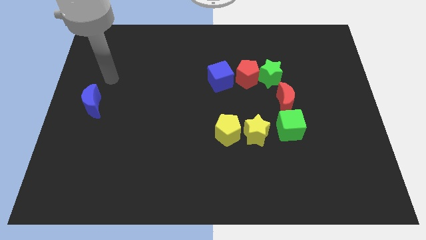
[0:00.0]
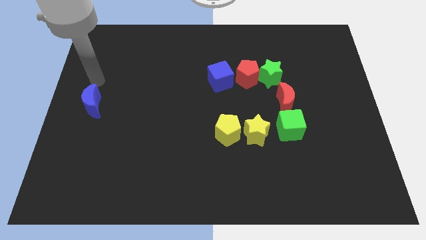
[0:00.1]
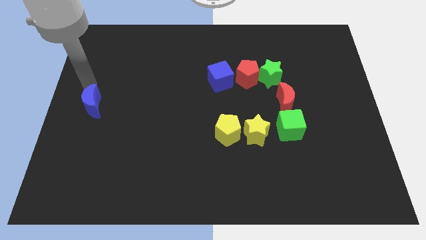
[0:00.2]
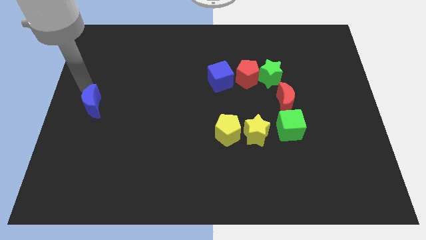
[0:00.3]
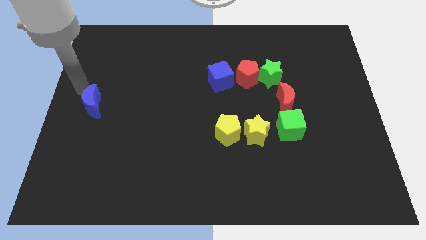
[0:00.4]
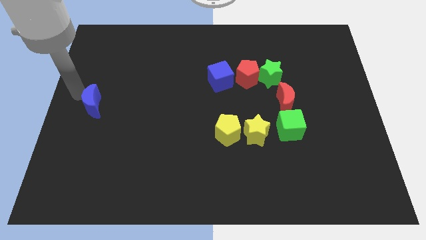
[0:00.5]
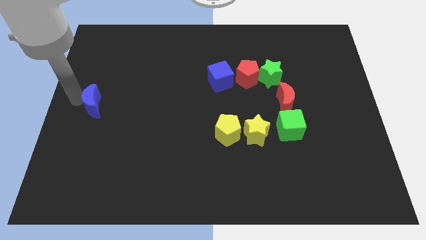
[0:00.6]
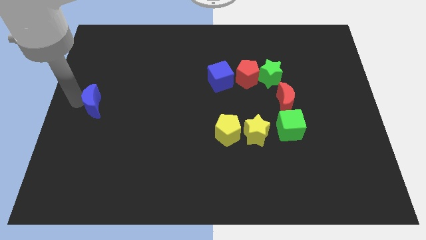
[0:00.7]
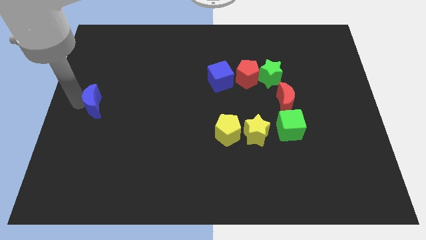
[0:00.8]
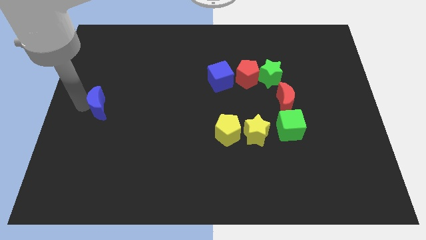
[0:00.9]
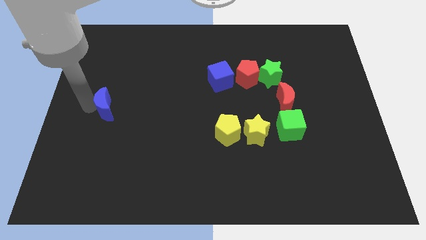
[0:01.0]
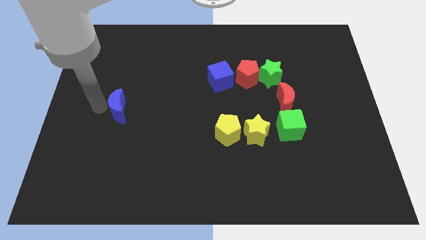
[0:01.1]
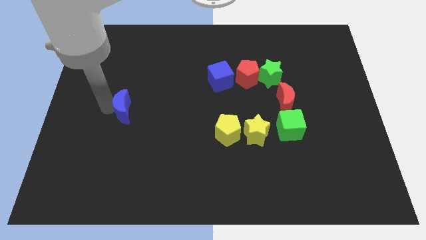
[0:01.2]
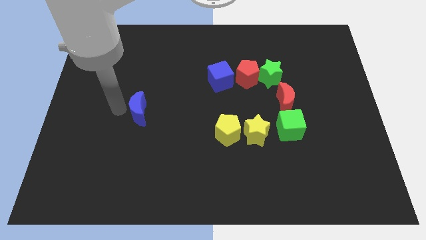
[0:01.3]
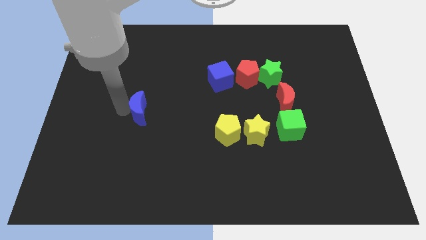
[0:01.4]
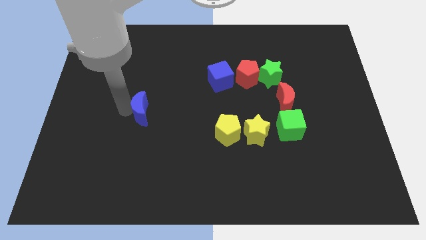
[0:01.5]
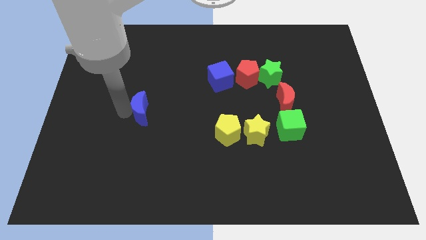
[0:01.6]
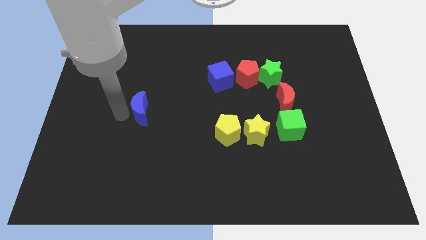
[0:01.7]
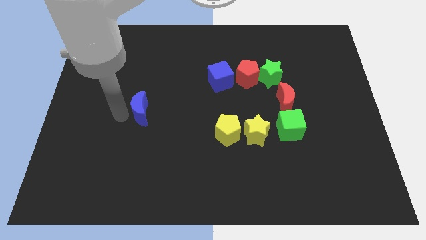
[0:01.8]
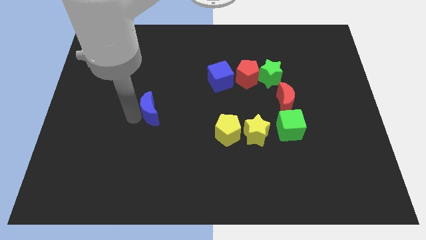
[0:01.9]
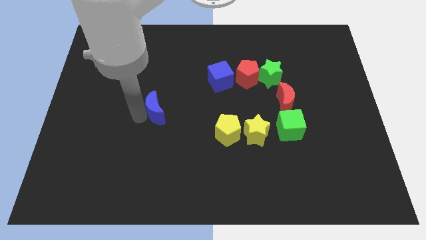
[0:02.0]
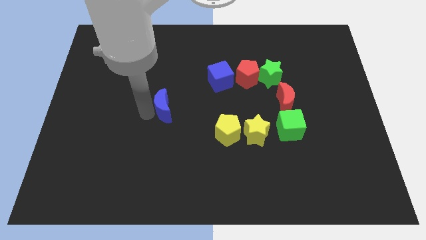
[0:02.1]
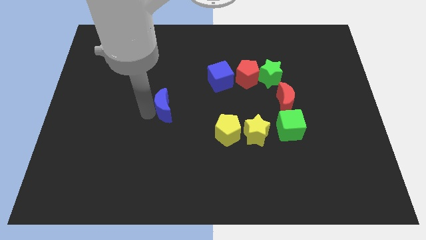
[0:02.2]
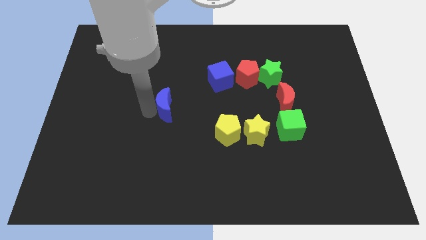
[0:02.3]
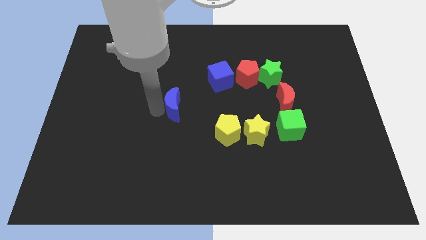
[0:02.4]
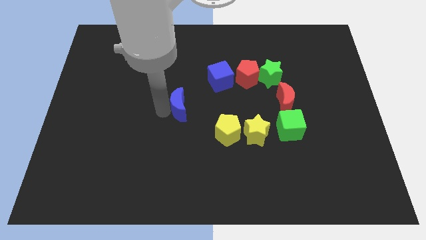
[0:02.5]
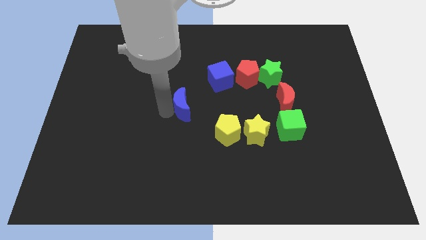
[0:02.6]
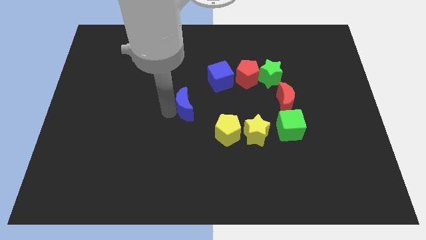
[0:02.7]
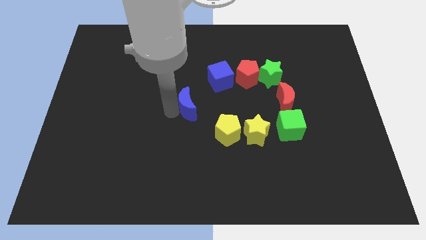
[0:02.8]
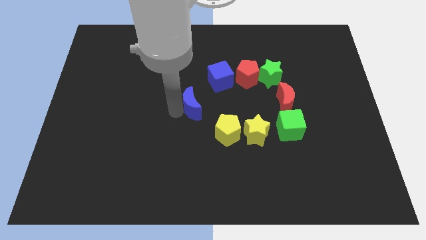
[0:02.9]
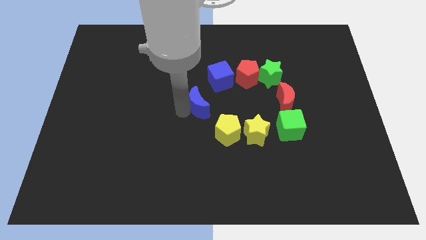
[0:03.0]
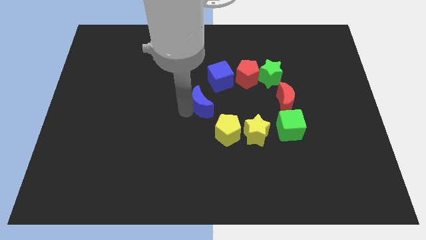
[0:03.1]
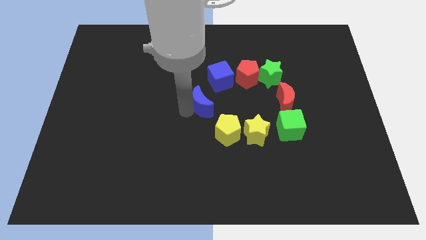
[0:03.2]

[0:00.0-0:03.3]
move the blue crescent to the top left side of the yellow pentagon

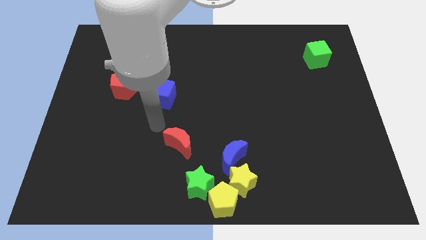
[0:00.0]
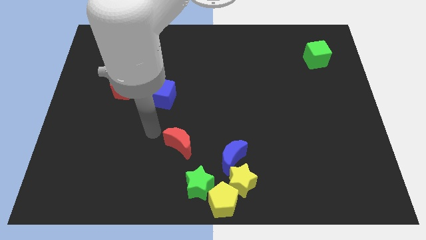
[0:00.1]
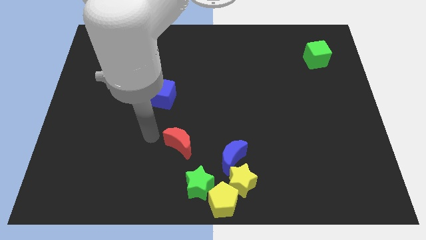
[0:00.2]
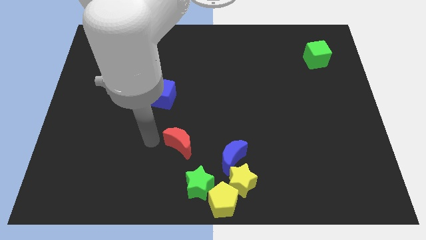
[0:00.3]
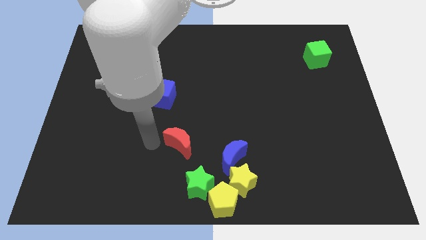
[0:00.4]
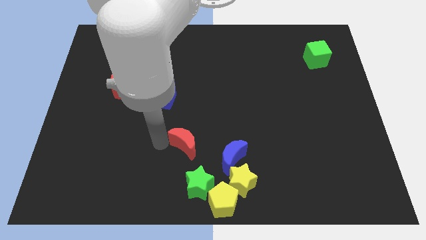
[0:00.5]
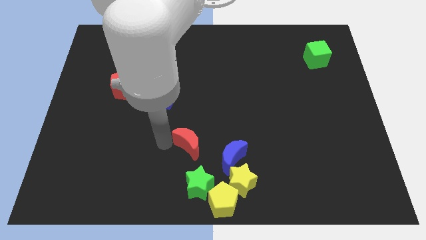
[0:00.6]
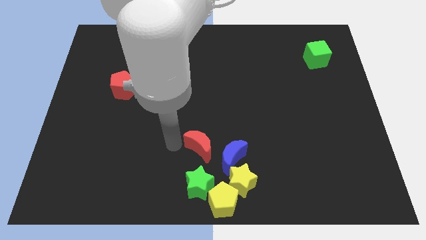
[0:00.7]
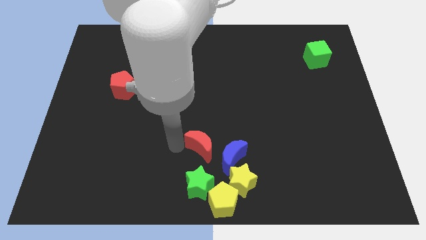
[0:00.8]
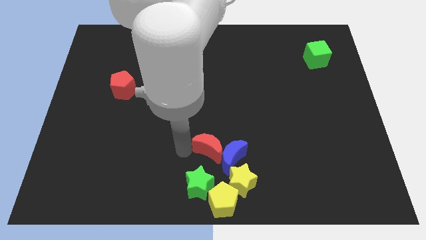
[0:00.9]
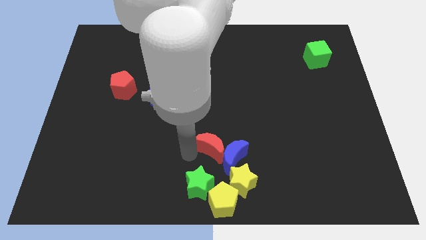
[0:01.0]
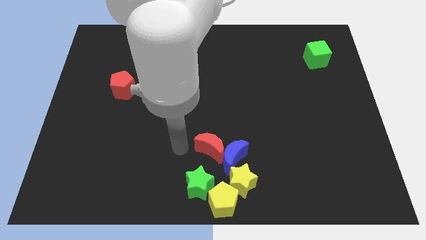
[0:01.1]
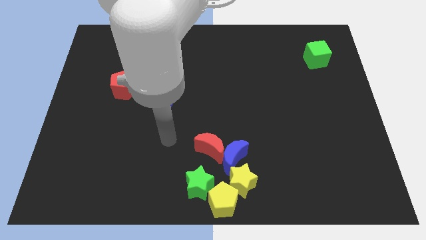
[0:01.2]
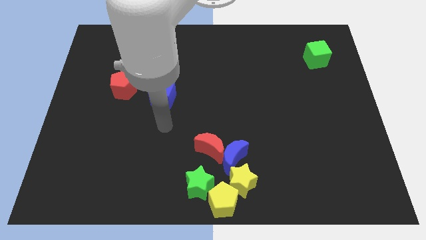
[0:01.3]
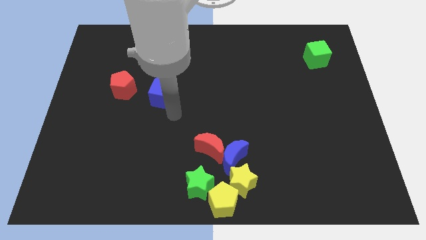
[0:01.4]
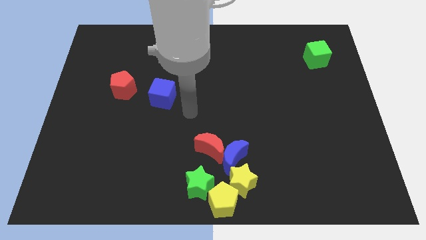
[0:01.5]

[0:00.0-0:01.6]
place red moon to the left side of the blue moon

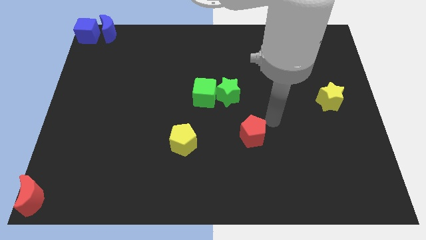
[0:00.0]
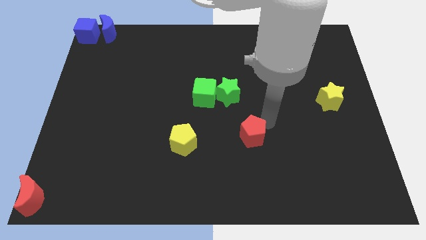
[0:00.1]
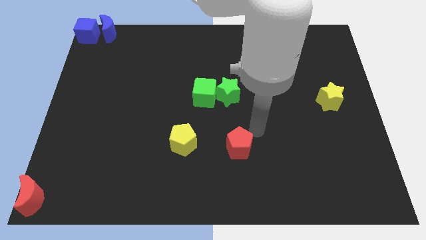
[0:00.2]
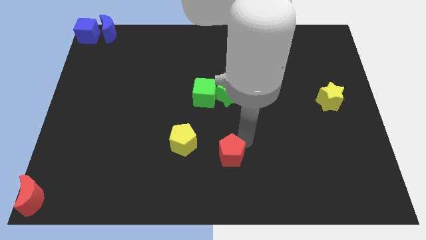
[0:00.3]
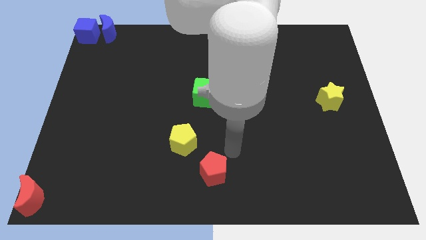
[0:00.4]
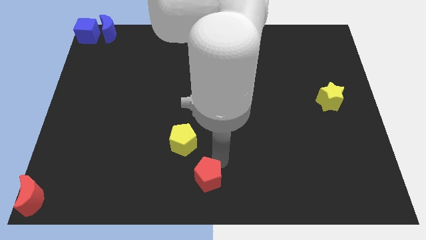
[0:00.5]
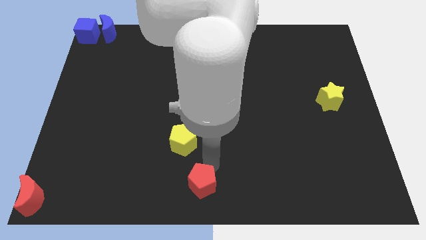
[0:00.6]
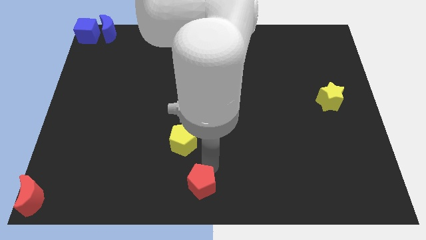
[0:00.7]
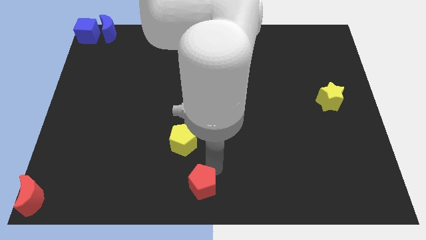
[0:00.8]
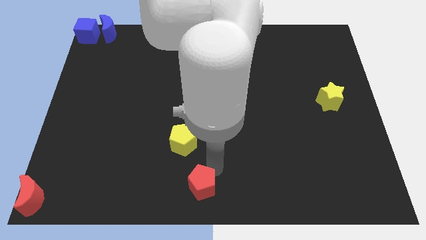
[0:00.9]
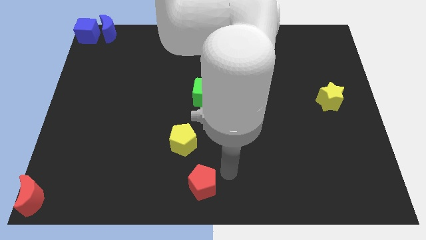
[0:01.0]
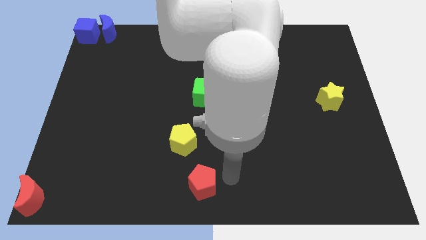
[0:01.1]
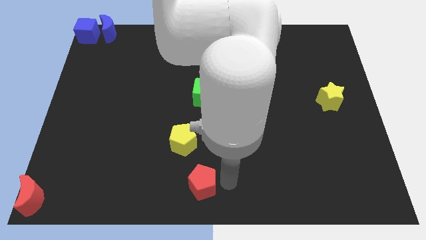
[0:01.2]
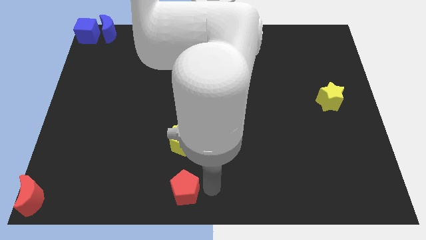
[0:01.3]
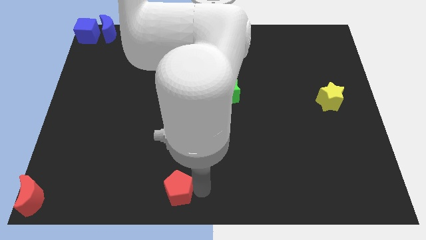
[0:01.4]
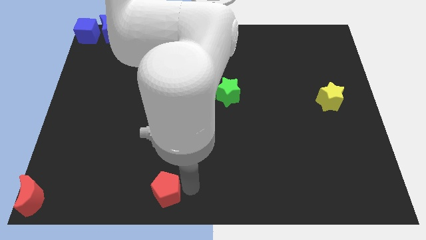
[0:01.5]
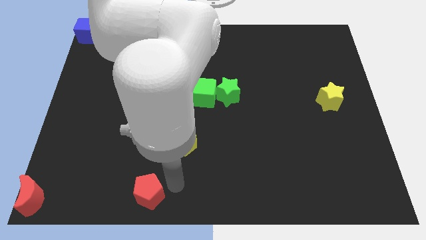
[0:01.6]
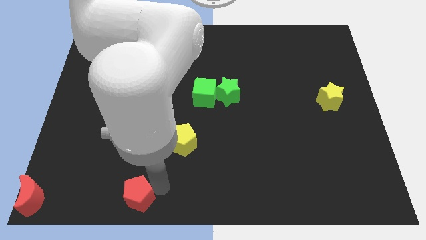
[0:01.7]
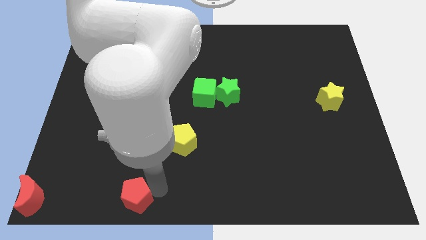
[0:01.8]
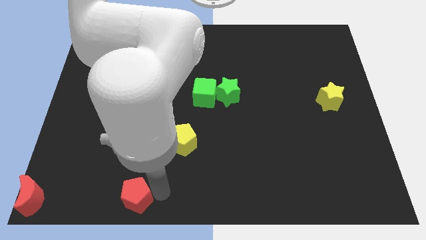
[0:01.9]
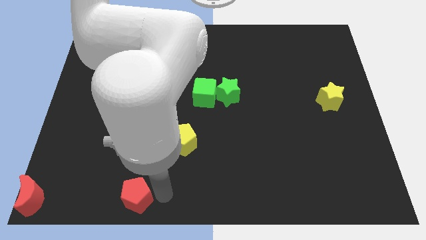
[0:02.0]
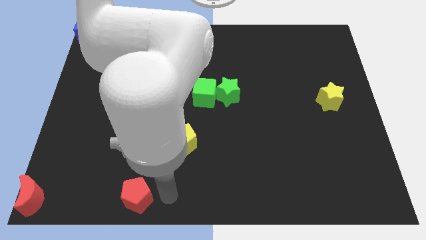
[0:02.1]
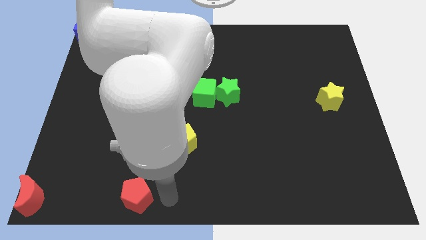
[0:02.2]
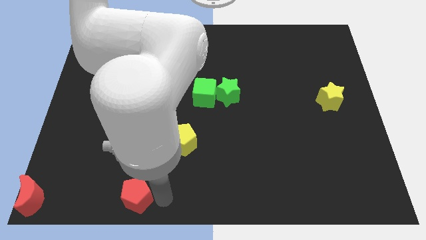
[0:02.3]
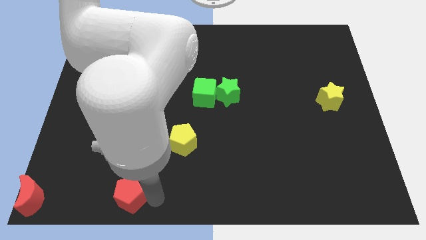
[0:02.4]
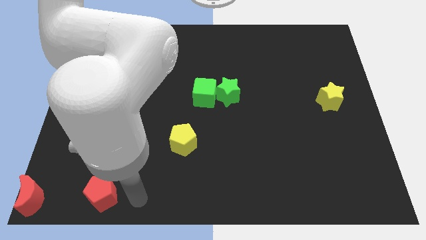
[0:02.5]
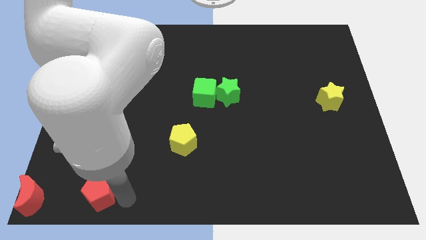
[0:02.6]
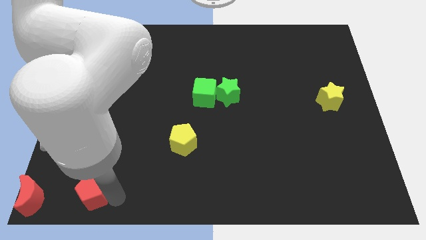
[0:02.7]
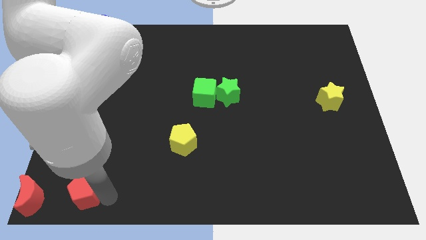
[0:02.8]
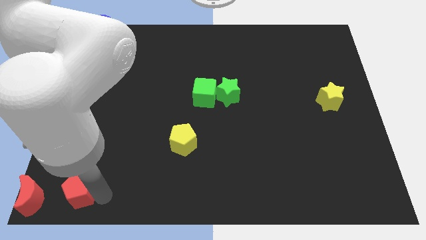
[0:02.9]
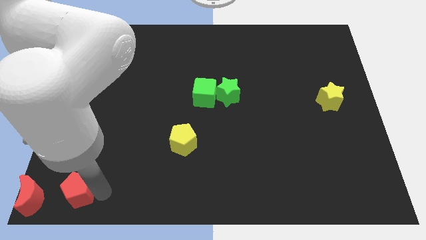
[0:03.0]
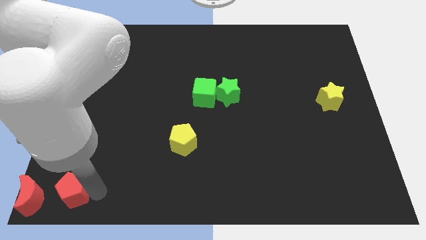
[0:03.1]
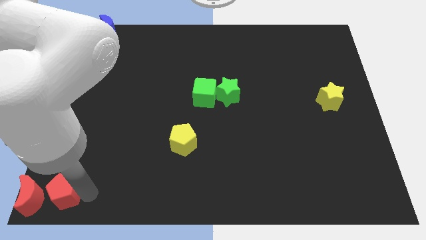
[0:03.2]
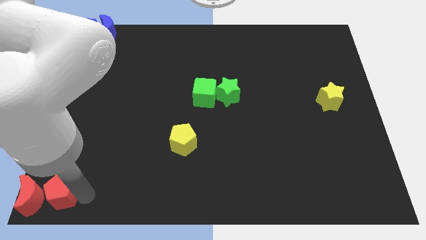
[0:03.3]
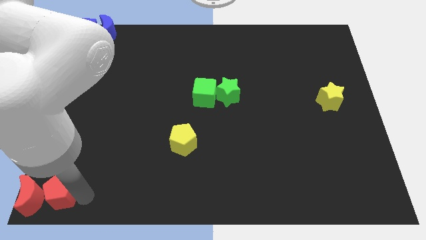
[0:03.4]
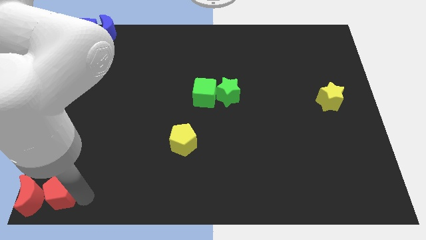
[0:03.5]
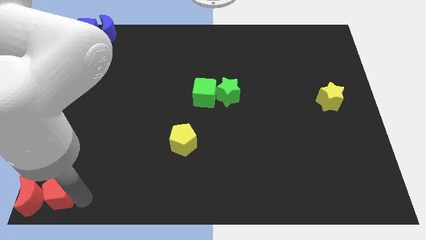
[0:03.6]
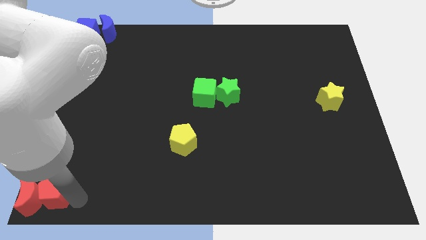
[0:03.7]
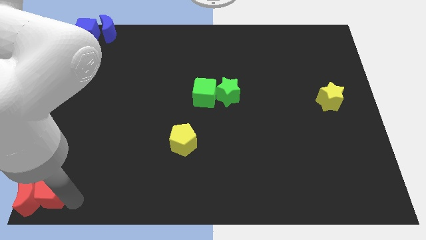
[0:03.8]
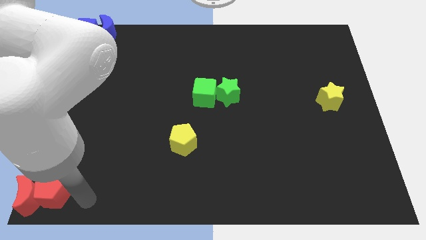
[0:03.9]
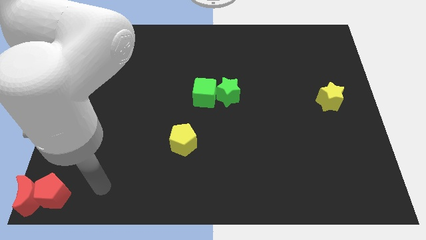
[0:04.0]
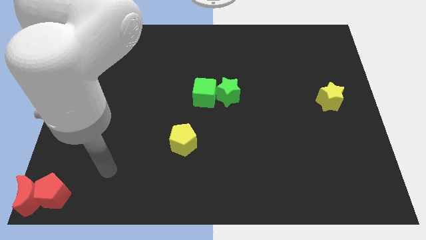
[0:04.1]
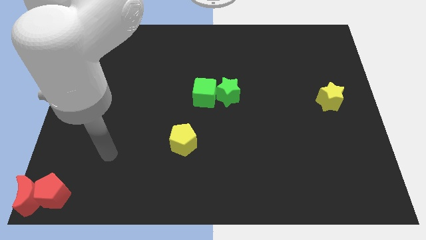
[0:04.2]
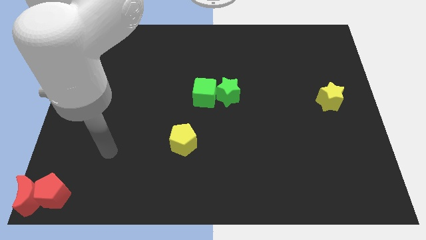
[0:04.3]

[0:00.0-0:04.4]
push the red pentagon to the right side of the red moon
